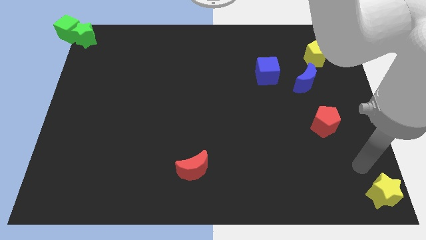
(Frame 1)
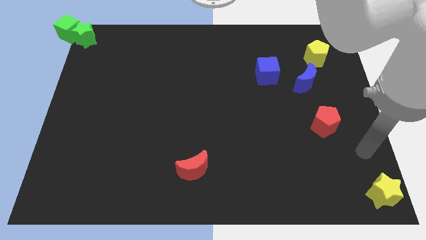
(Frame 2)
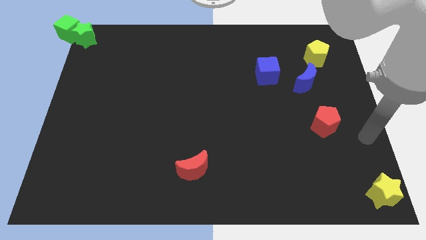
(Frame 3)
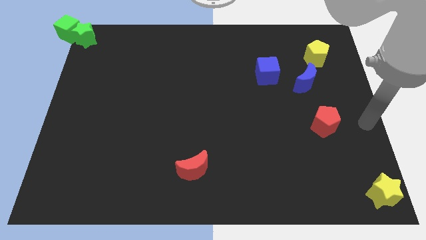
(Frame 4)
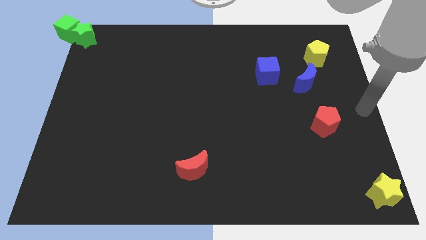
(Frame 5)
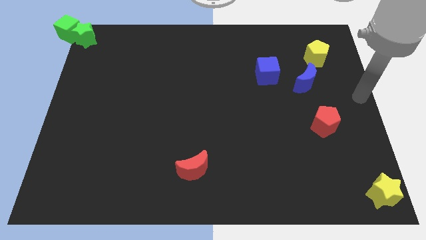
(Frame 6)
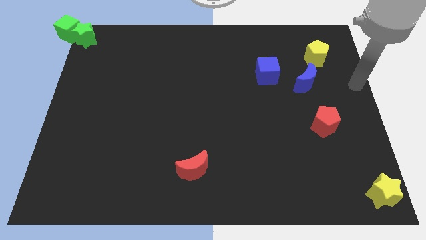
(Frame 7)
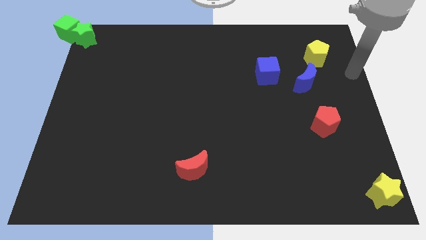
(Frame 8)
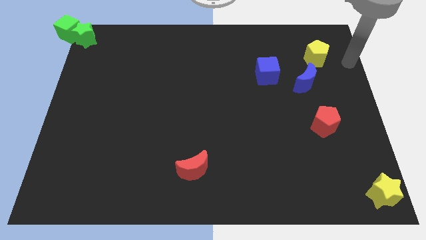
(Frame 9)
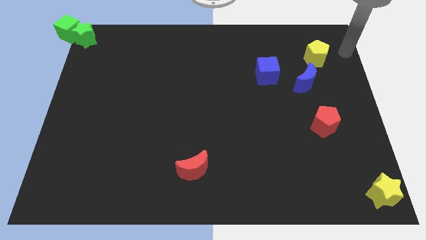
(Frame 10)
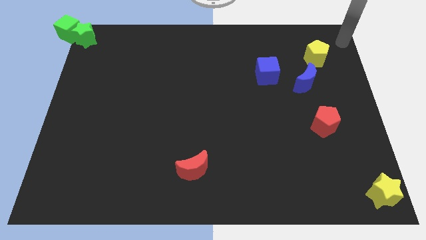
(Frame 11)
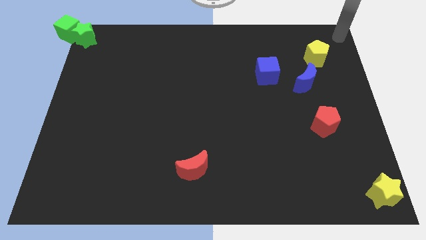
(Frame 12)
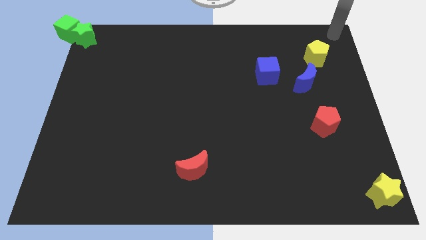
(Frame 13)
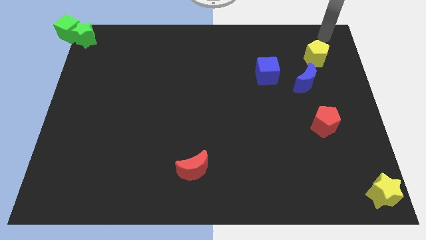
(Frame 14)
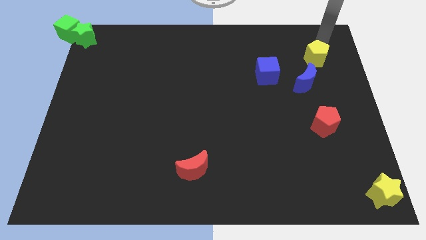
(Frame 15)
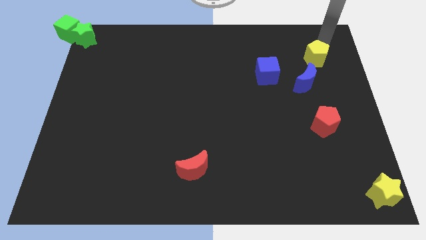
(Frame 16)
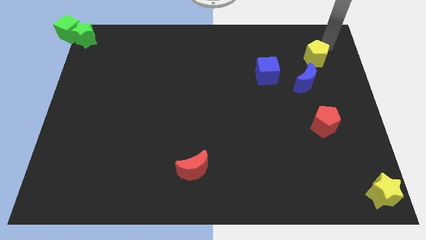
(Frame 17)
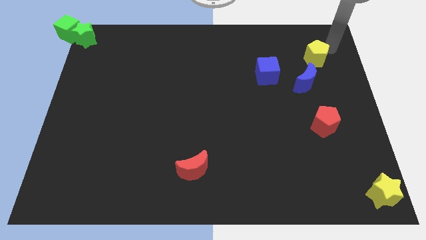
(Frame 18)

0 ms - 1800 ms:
move your arm to the top right of the board

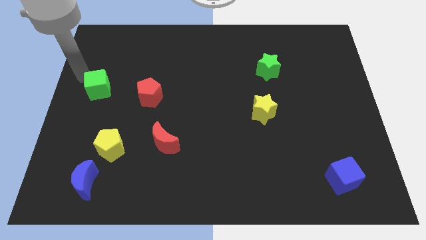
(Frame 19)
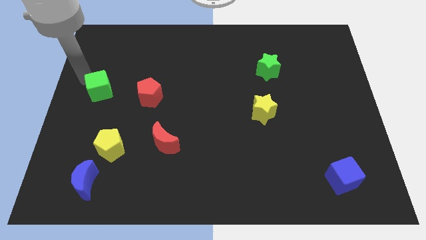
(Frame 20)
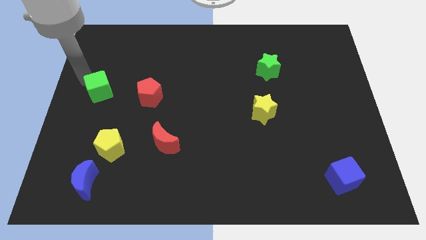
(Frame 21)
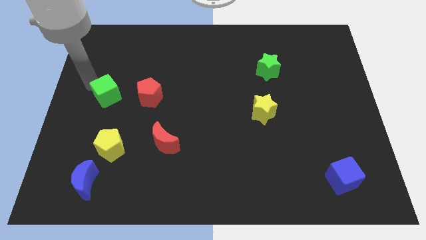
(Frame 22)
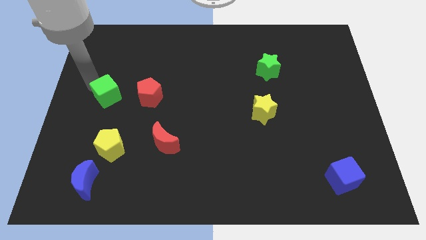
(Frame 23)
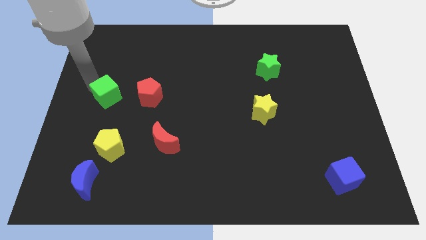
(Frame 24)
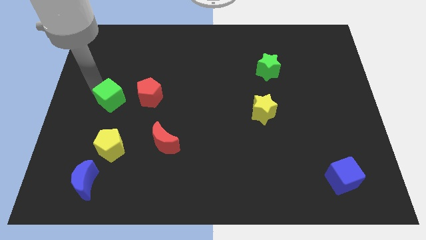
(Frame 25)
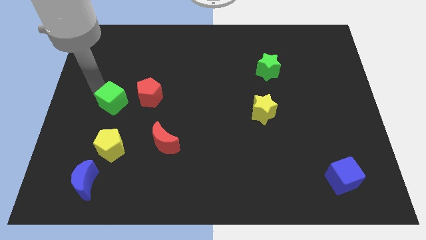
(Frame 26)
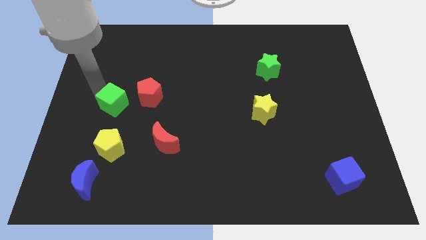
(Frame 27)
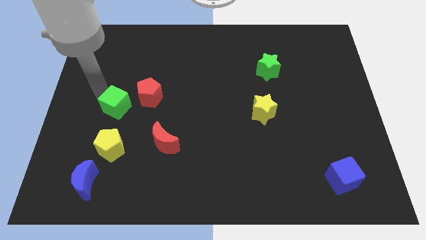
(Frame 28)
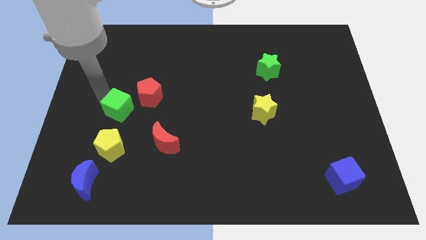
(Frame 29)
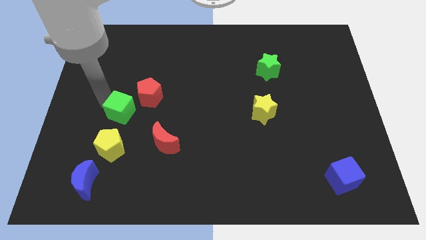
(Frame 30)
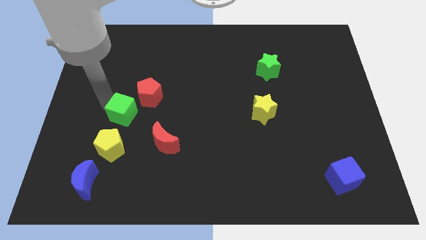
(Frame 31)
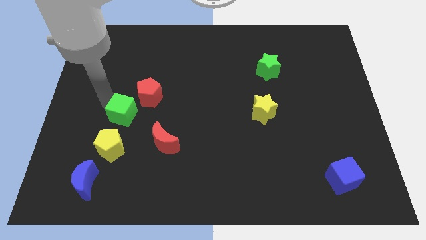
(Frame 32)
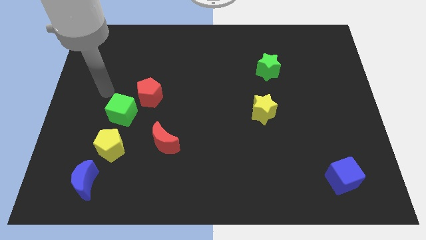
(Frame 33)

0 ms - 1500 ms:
push your arm to the bottom left of the red pentagon

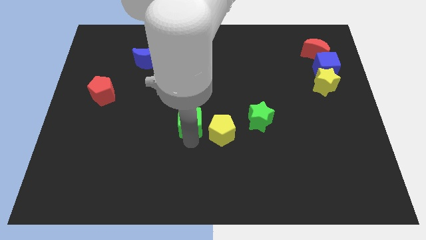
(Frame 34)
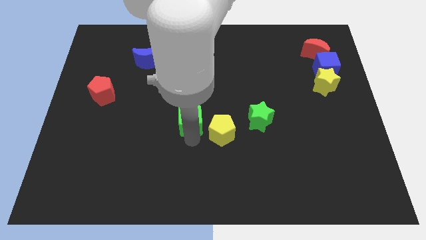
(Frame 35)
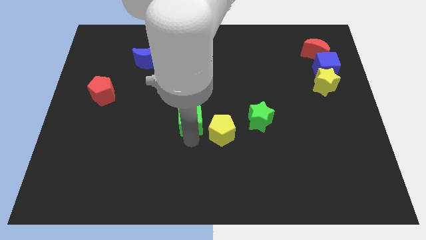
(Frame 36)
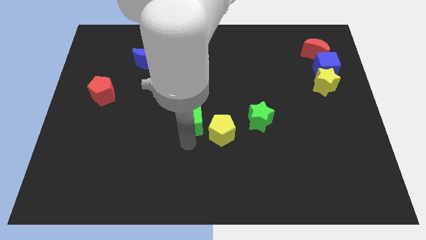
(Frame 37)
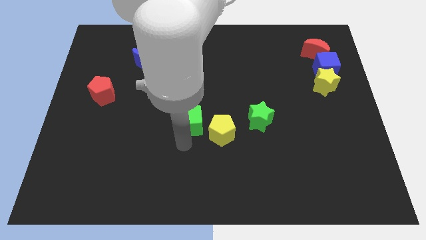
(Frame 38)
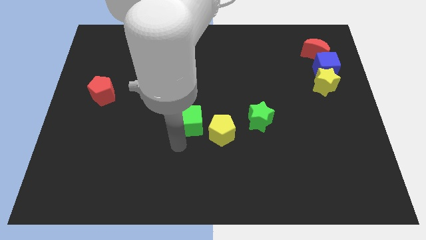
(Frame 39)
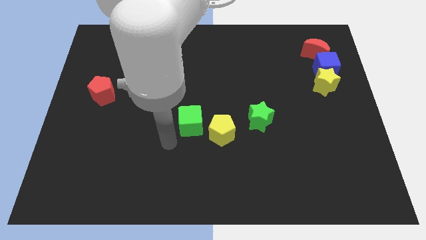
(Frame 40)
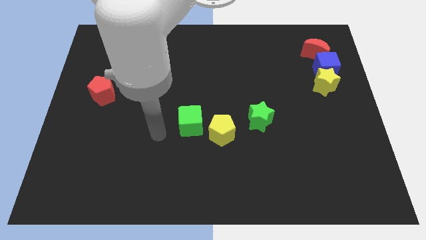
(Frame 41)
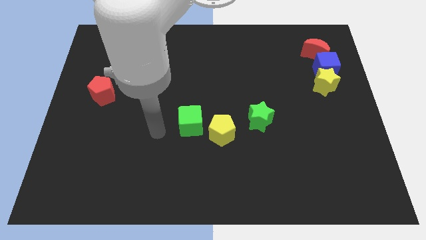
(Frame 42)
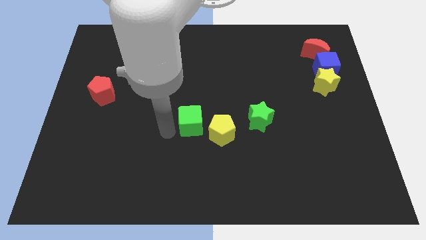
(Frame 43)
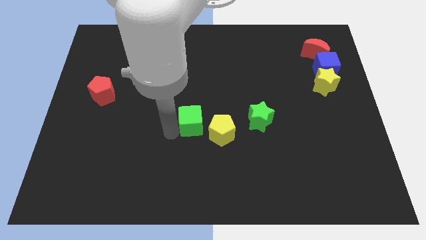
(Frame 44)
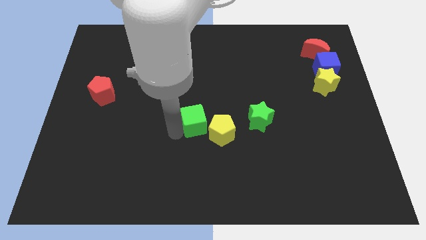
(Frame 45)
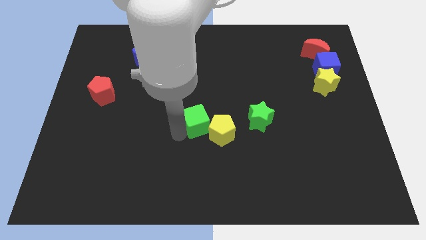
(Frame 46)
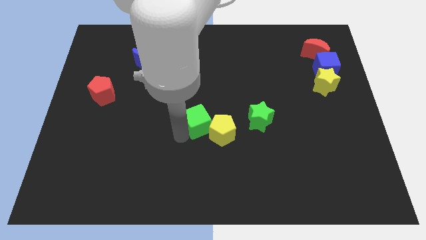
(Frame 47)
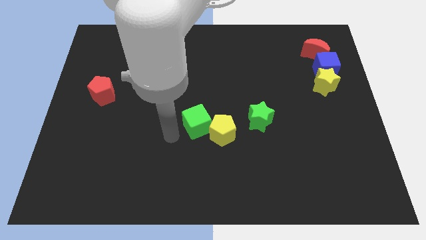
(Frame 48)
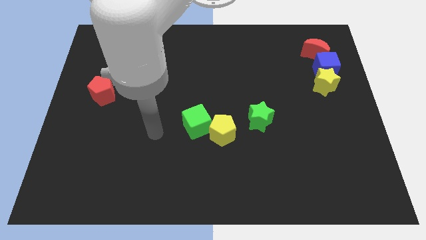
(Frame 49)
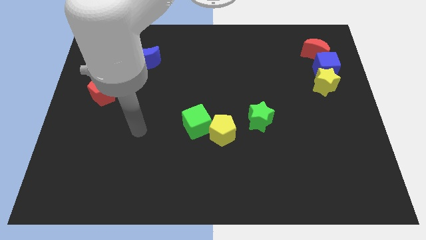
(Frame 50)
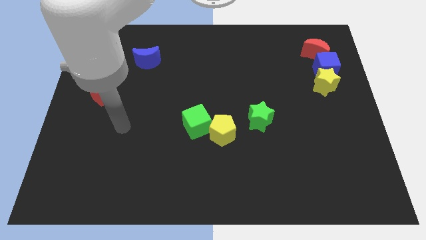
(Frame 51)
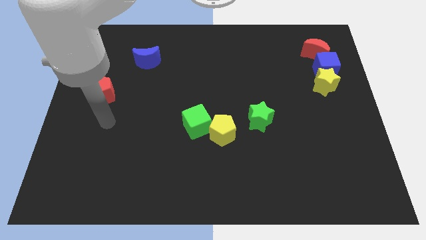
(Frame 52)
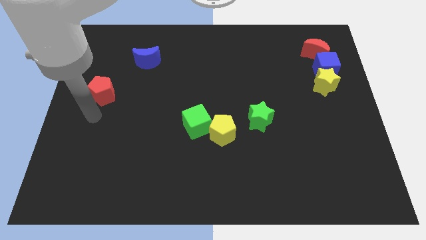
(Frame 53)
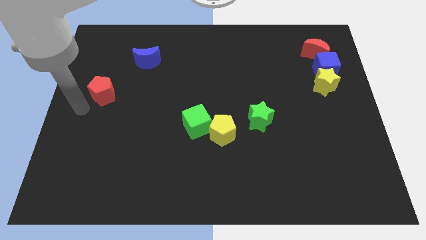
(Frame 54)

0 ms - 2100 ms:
add green cube into yellow pentagon

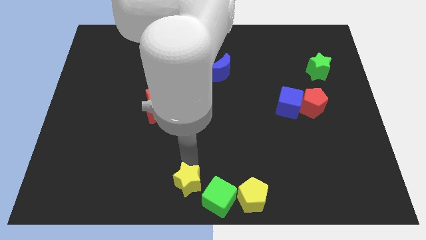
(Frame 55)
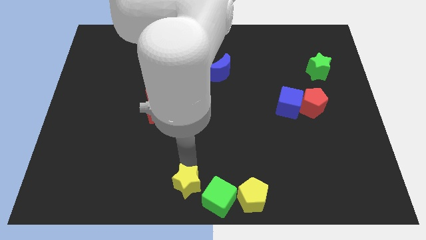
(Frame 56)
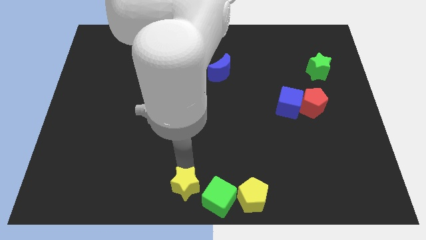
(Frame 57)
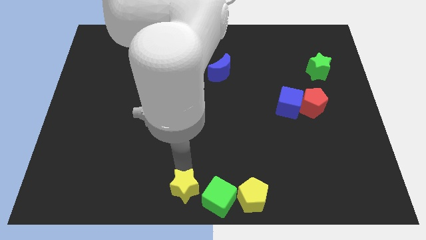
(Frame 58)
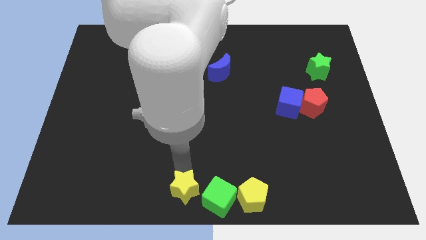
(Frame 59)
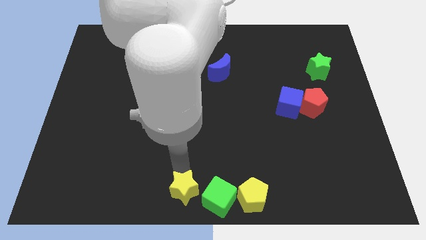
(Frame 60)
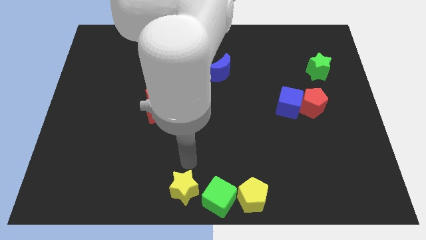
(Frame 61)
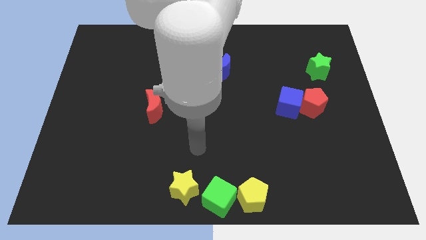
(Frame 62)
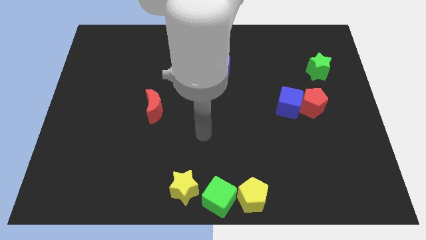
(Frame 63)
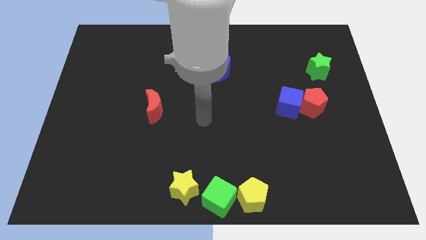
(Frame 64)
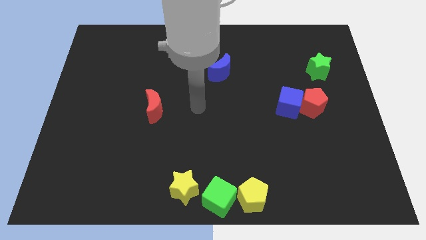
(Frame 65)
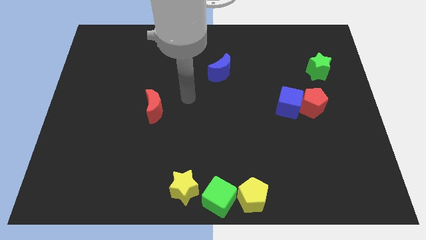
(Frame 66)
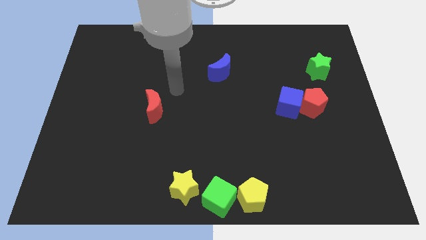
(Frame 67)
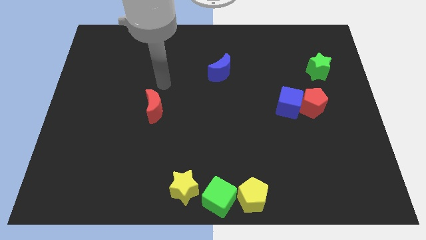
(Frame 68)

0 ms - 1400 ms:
move yellow star left beside the green cube

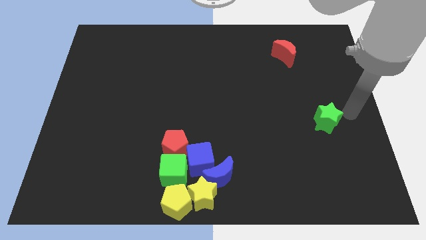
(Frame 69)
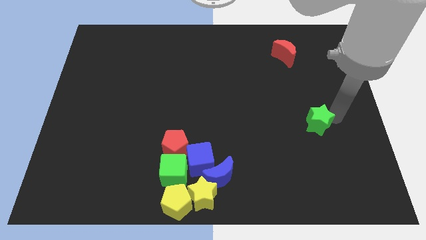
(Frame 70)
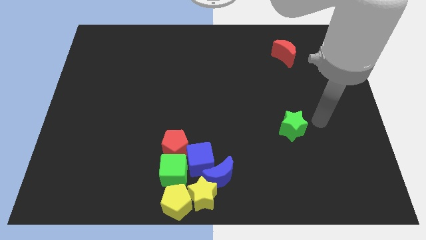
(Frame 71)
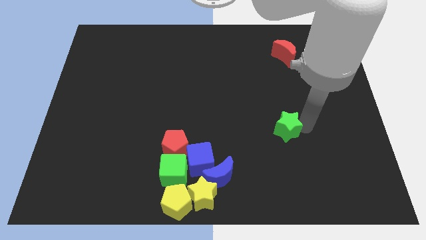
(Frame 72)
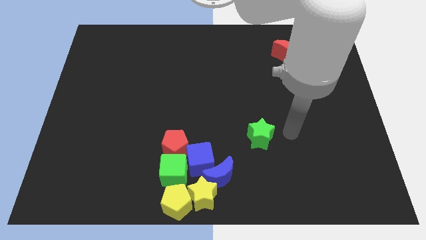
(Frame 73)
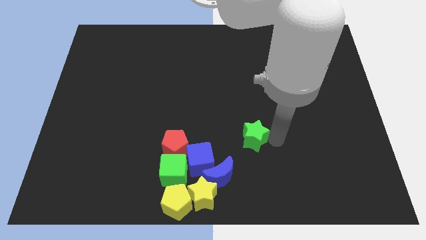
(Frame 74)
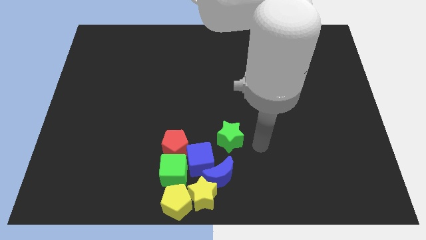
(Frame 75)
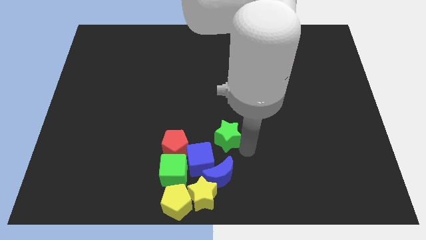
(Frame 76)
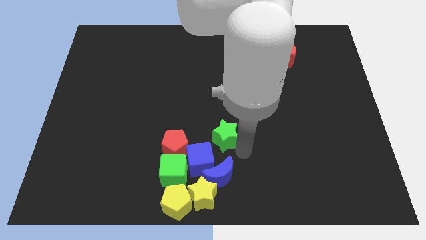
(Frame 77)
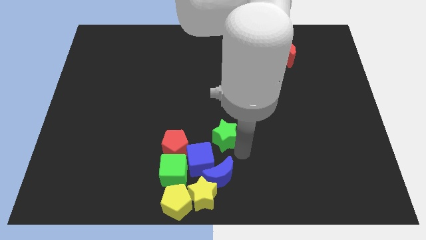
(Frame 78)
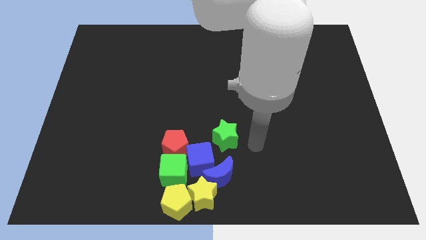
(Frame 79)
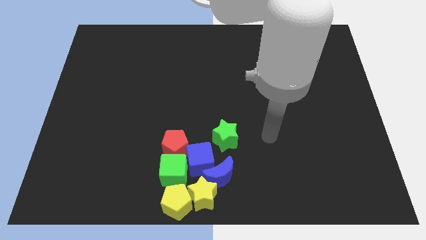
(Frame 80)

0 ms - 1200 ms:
push the green star to the downward

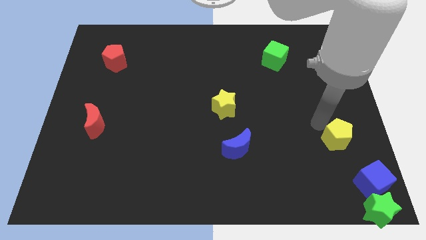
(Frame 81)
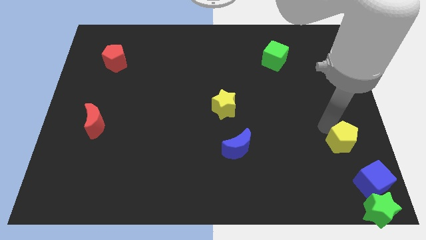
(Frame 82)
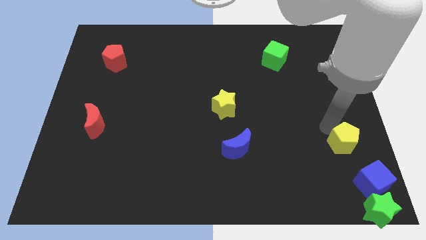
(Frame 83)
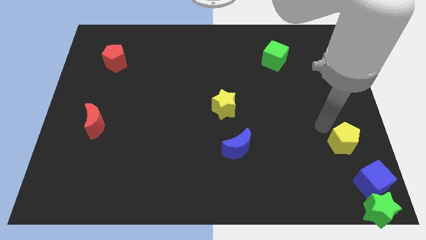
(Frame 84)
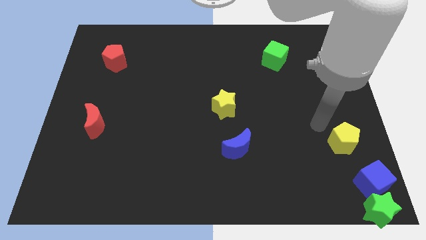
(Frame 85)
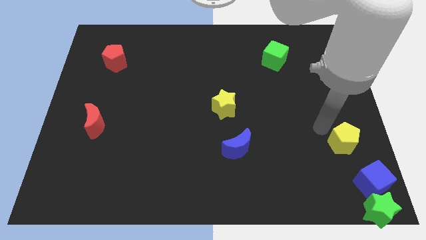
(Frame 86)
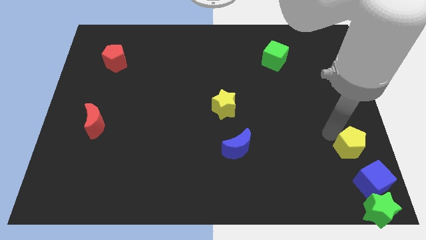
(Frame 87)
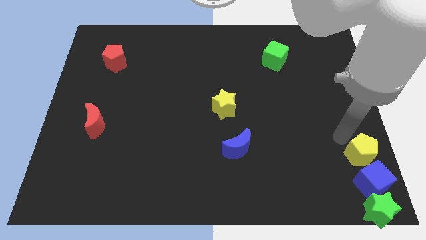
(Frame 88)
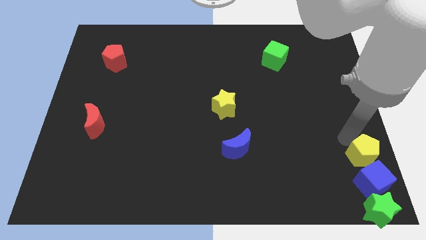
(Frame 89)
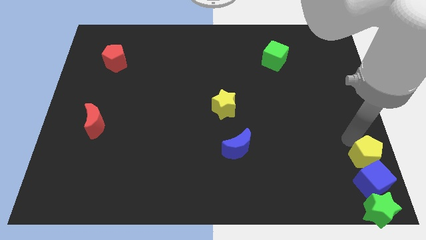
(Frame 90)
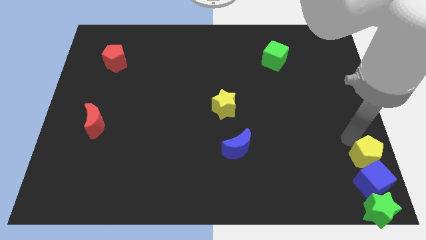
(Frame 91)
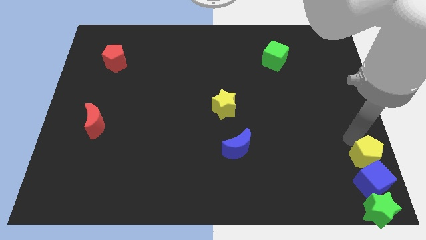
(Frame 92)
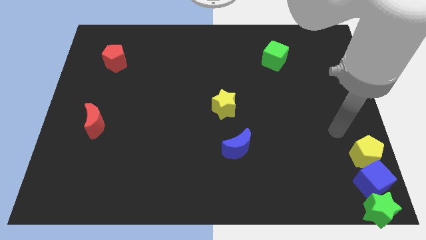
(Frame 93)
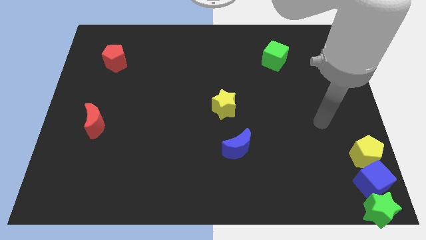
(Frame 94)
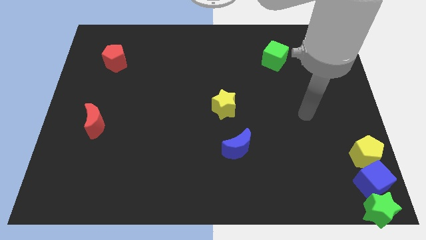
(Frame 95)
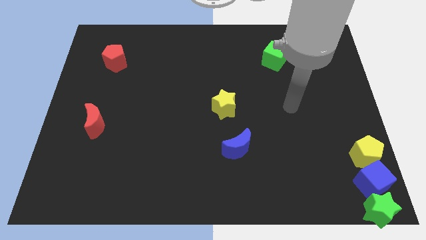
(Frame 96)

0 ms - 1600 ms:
place the yellow pentagon horizontally to the right side of the blue crescent
